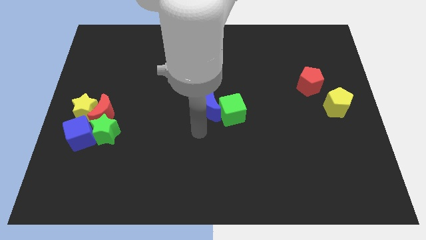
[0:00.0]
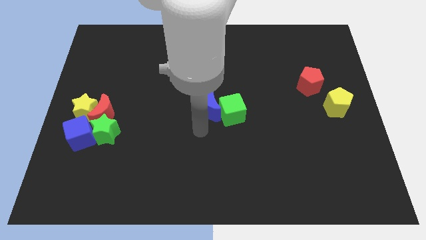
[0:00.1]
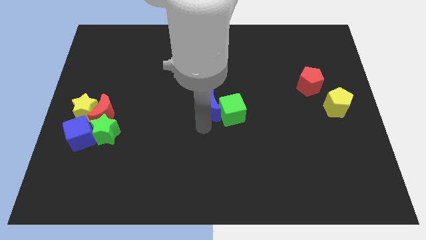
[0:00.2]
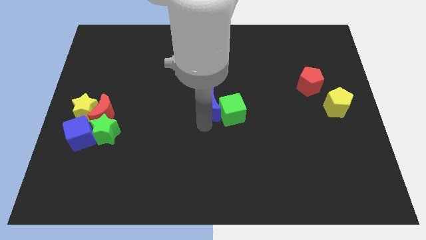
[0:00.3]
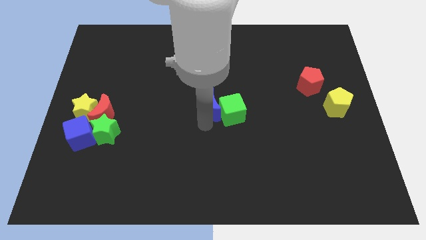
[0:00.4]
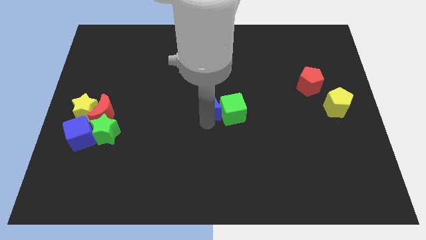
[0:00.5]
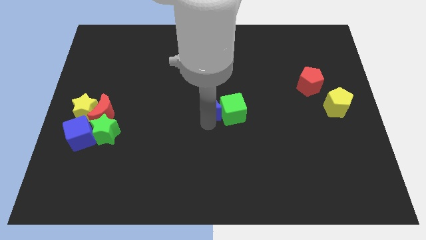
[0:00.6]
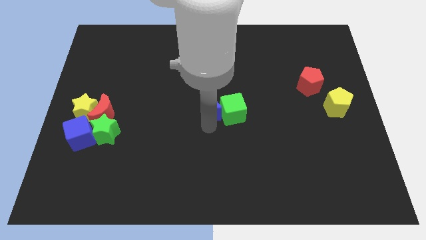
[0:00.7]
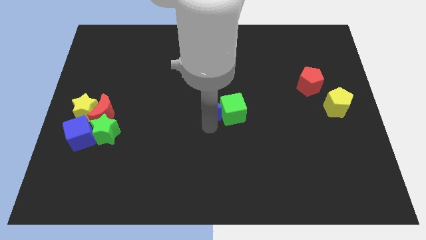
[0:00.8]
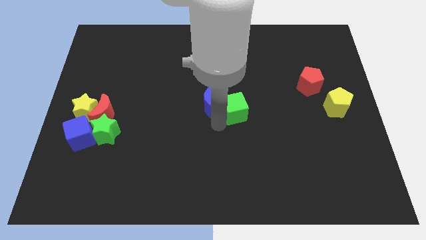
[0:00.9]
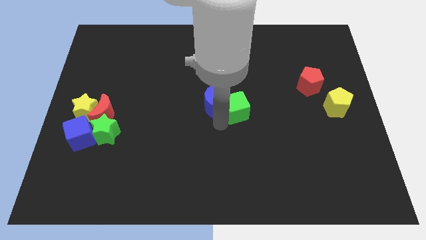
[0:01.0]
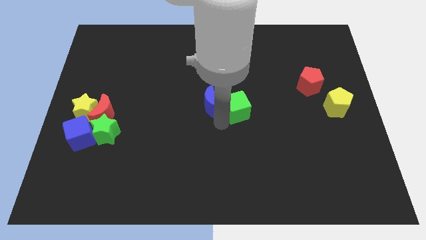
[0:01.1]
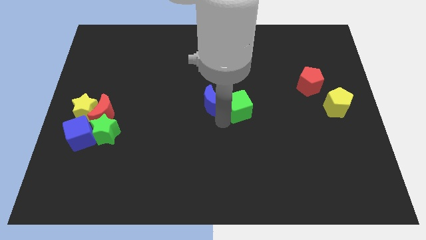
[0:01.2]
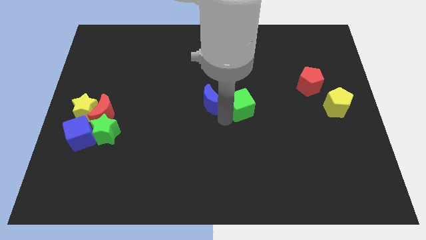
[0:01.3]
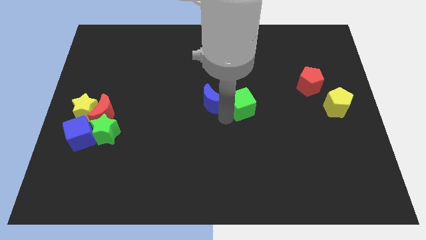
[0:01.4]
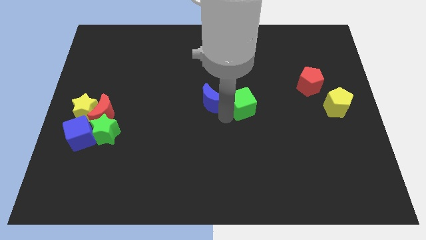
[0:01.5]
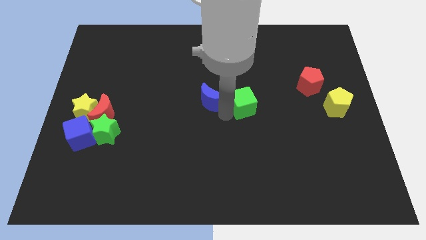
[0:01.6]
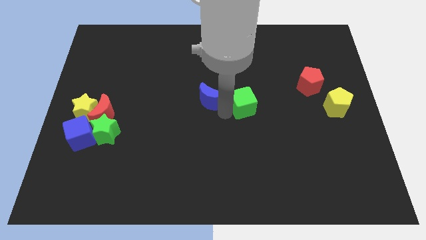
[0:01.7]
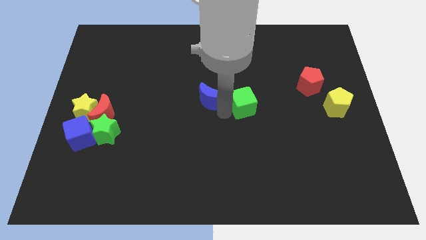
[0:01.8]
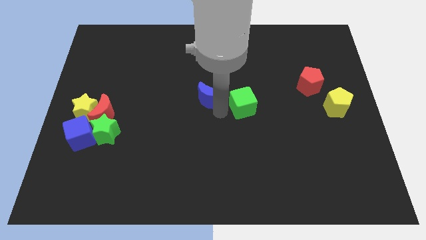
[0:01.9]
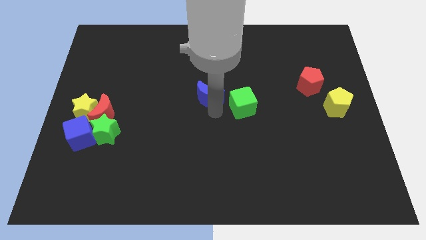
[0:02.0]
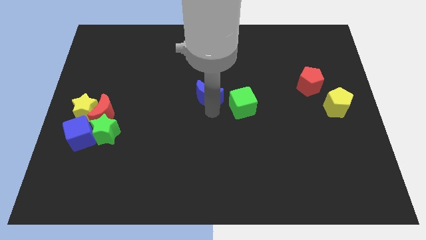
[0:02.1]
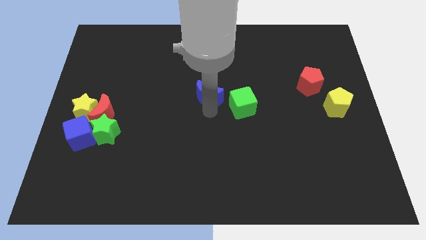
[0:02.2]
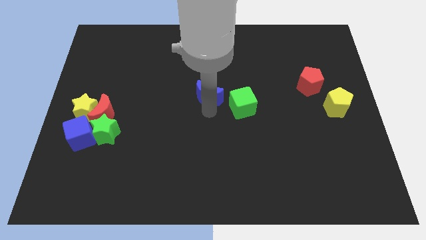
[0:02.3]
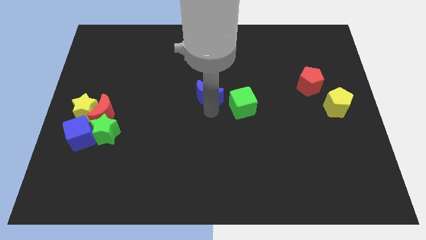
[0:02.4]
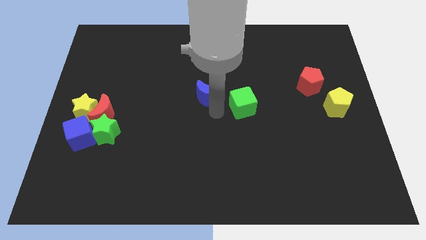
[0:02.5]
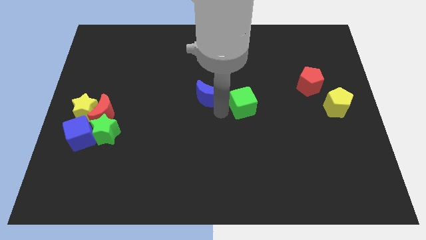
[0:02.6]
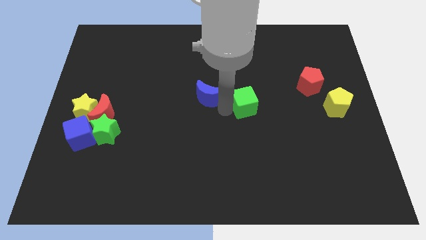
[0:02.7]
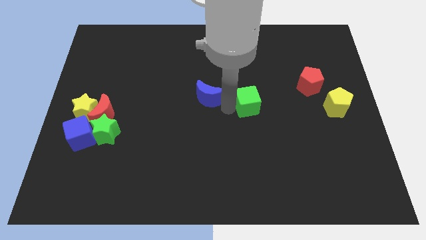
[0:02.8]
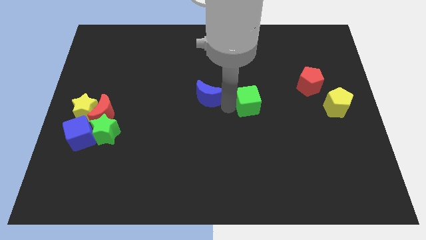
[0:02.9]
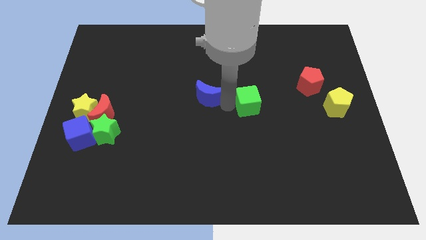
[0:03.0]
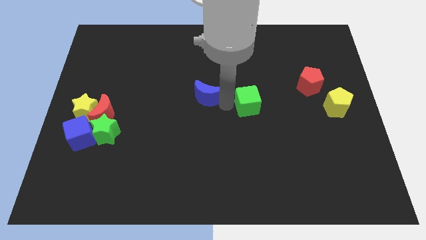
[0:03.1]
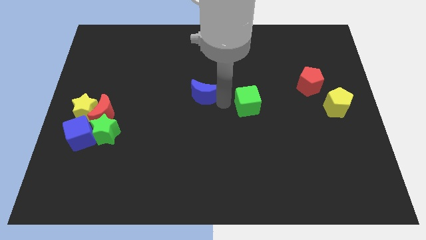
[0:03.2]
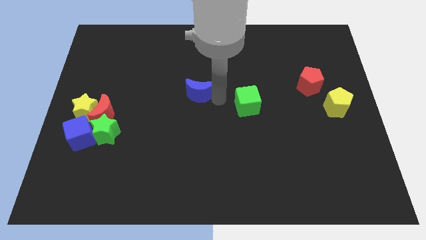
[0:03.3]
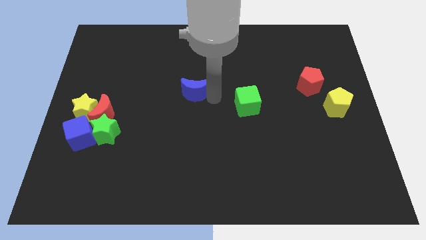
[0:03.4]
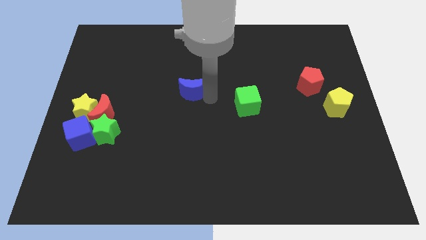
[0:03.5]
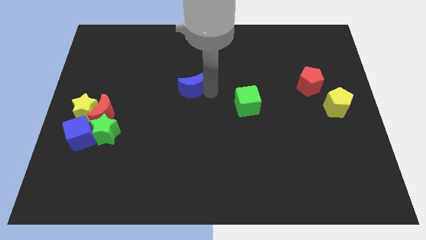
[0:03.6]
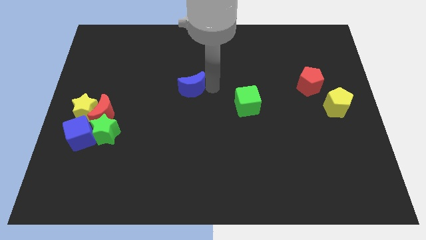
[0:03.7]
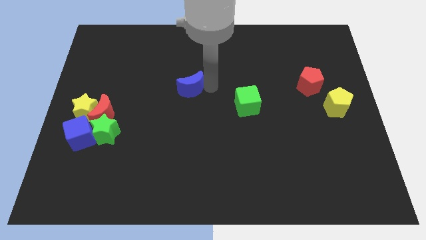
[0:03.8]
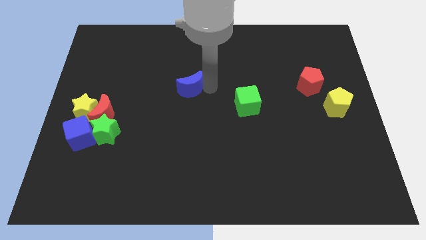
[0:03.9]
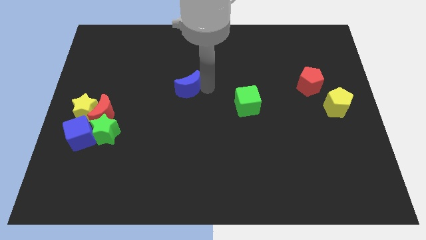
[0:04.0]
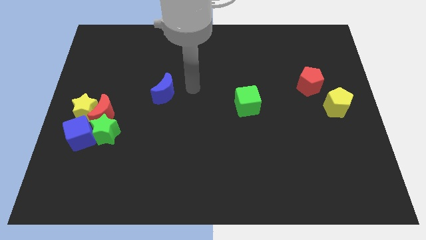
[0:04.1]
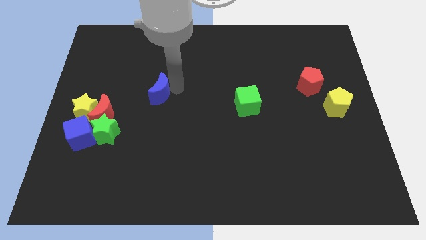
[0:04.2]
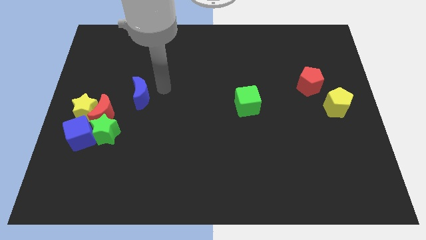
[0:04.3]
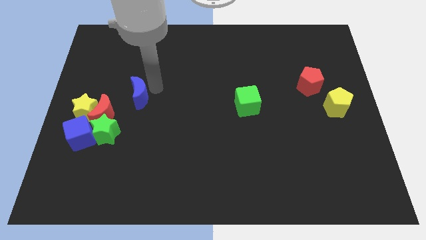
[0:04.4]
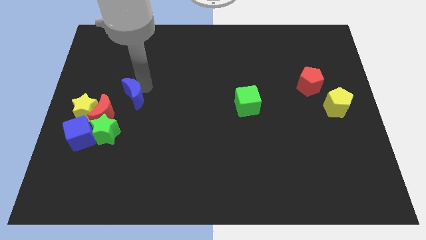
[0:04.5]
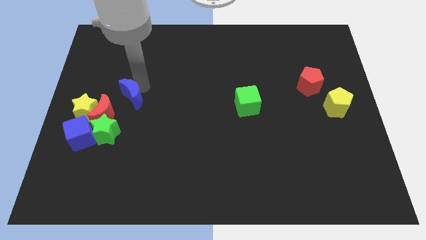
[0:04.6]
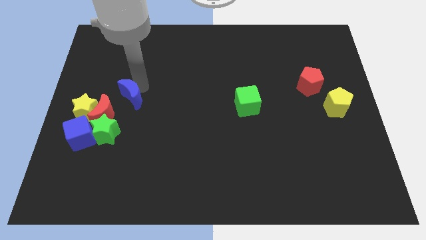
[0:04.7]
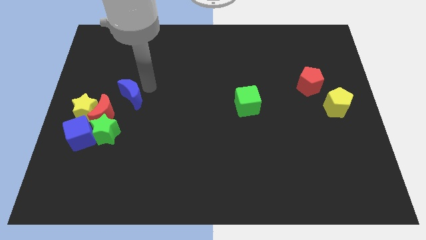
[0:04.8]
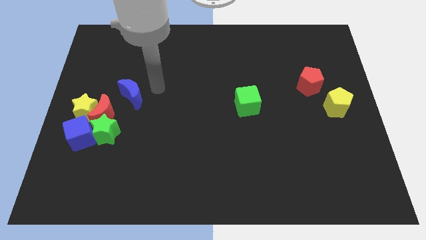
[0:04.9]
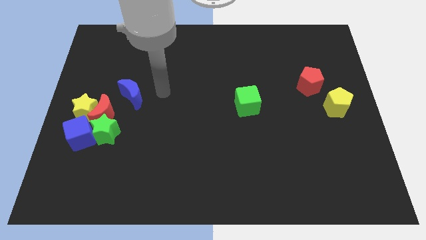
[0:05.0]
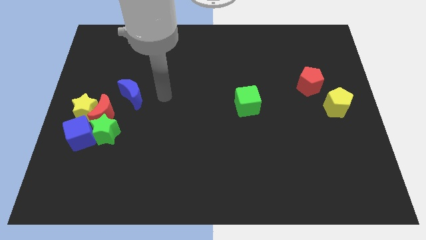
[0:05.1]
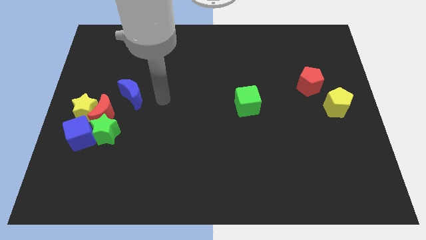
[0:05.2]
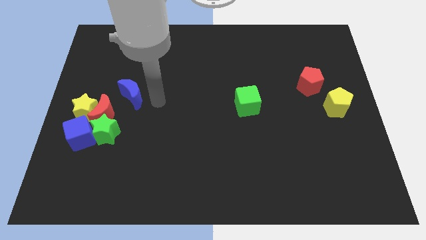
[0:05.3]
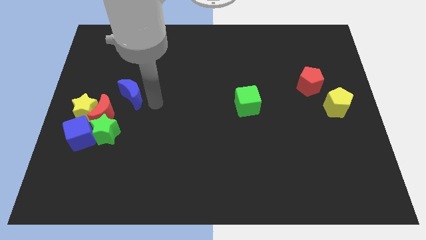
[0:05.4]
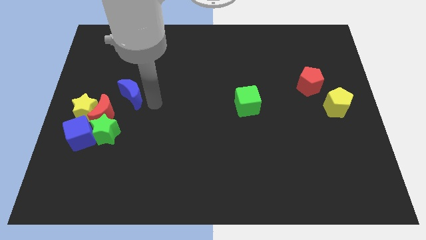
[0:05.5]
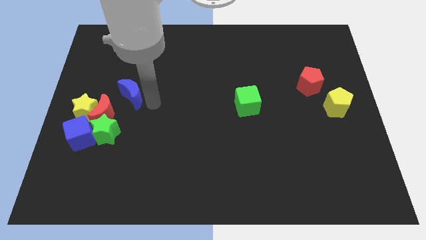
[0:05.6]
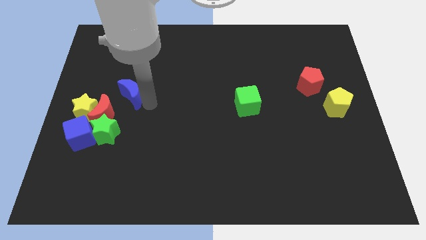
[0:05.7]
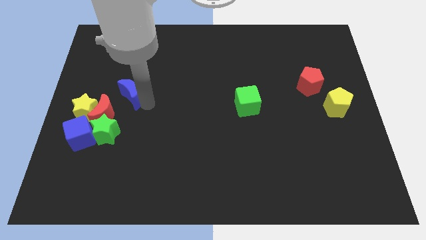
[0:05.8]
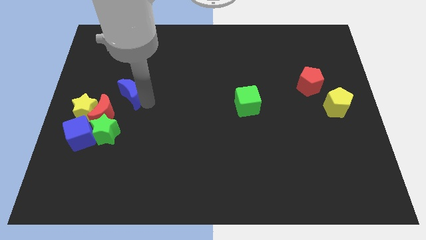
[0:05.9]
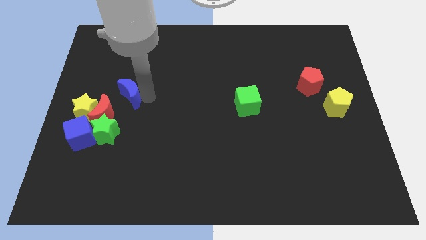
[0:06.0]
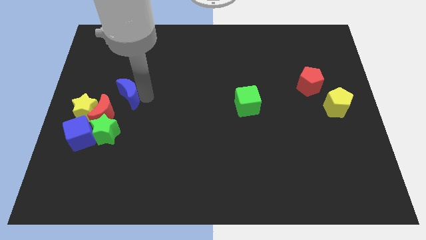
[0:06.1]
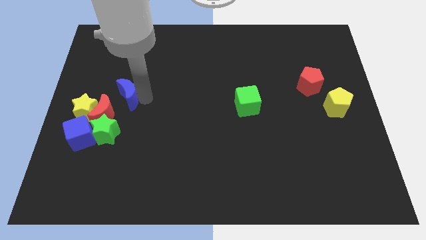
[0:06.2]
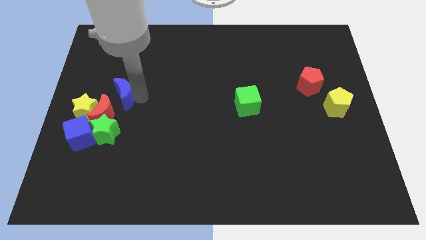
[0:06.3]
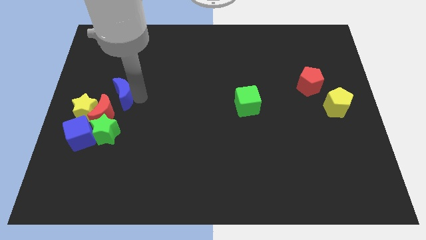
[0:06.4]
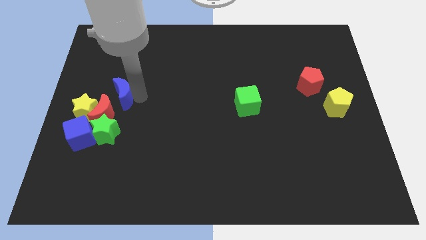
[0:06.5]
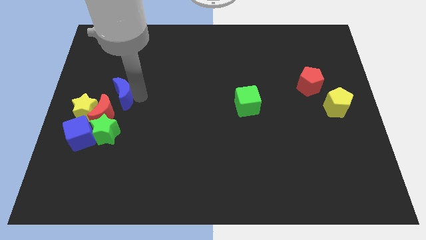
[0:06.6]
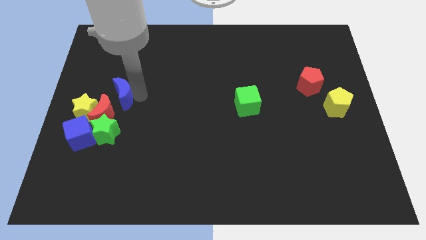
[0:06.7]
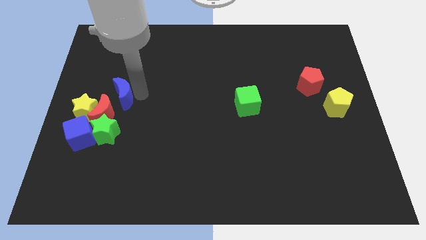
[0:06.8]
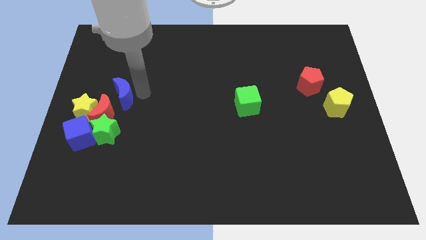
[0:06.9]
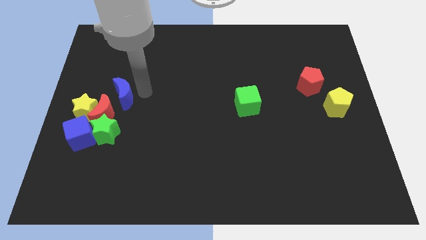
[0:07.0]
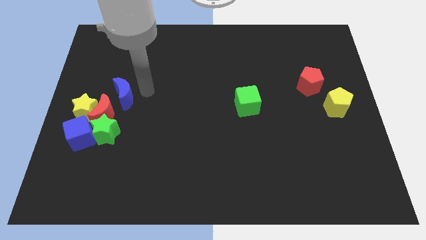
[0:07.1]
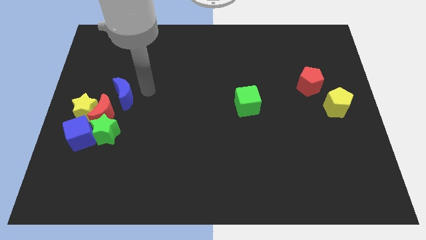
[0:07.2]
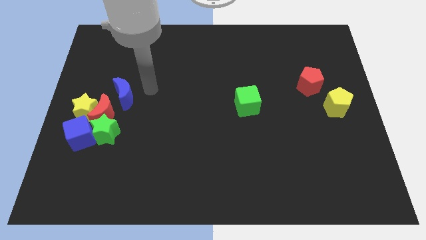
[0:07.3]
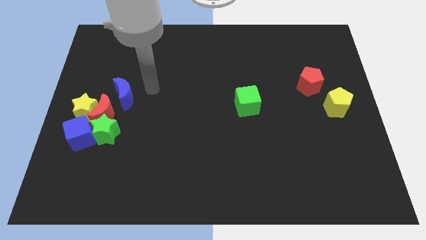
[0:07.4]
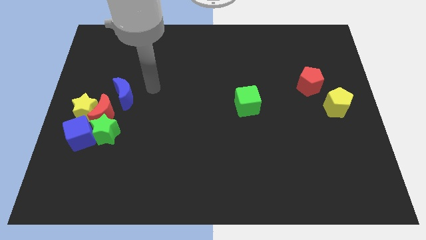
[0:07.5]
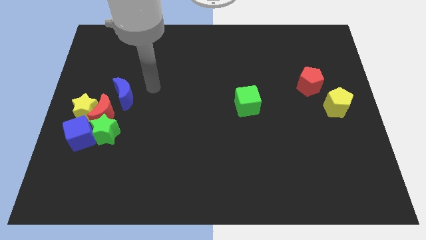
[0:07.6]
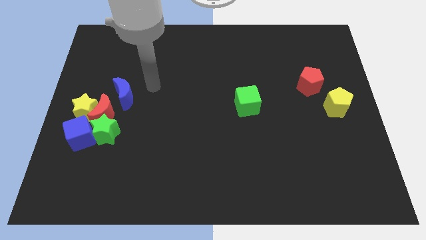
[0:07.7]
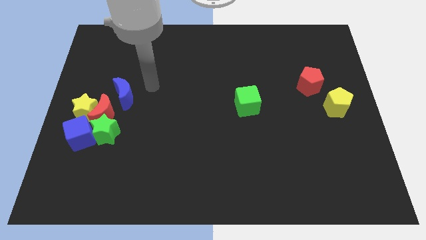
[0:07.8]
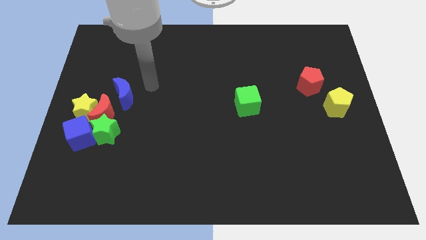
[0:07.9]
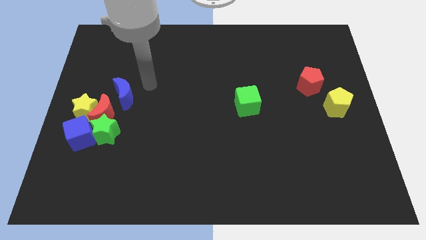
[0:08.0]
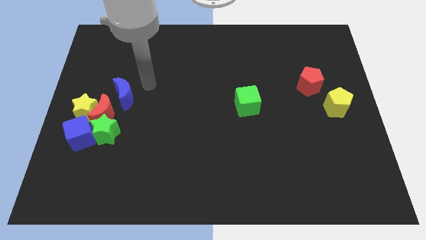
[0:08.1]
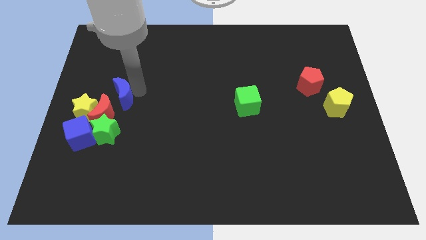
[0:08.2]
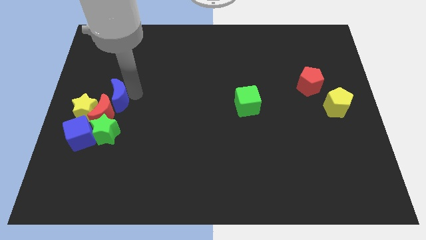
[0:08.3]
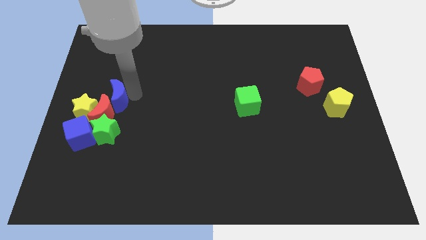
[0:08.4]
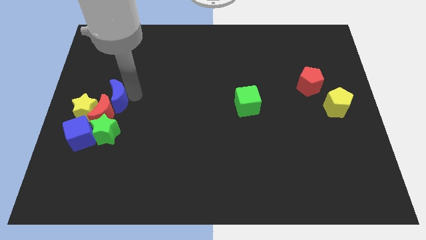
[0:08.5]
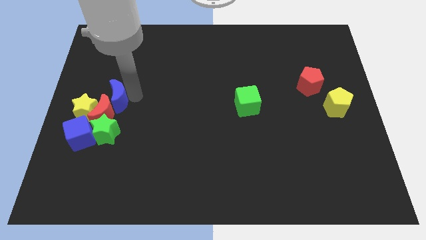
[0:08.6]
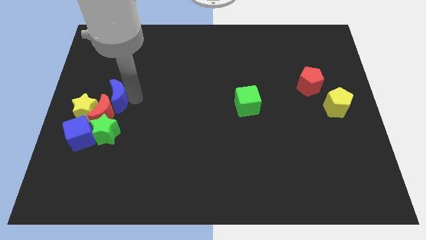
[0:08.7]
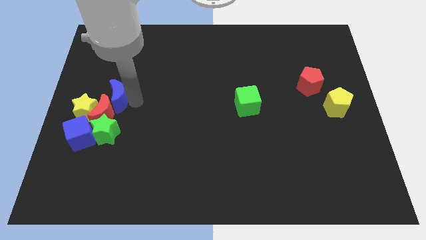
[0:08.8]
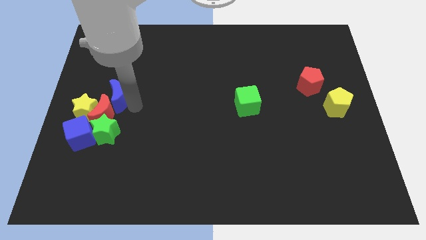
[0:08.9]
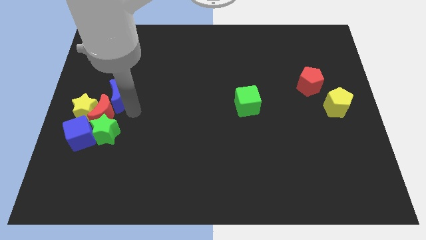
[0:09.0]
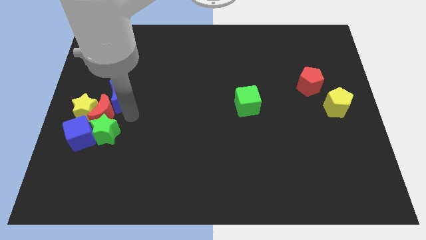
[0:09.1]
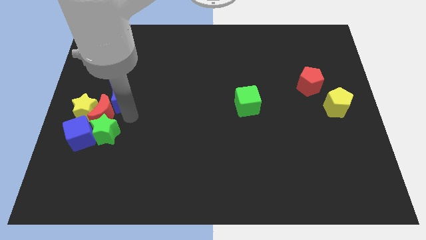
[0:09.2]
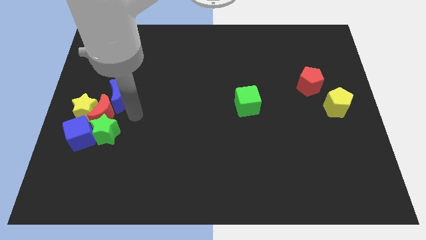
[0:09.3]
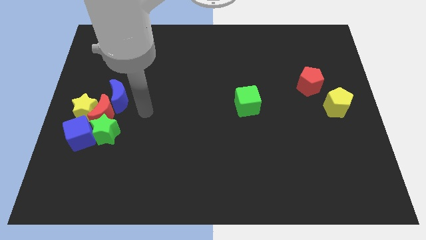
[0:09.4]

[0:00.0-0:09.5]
push the blue crescent to the top left corner of the red crescent
